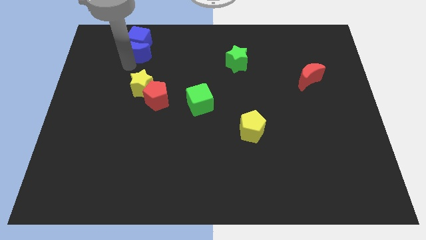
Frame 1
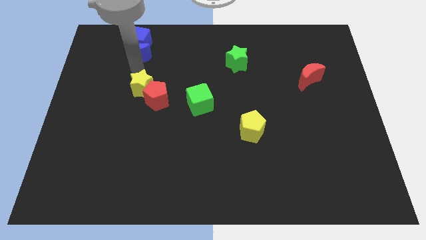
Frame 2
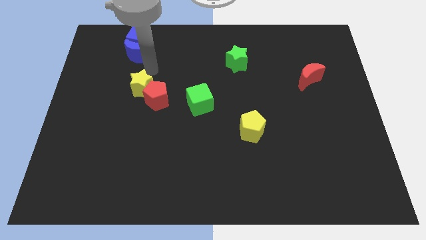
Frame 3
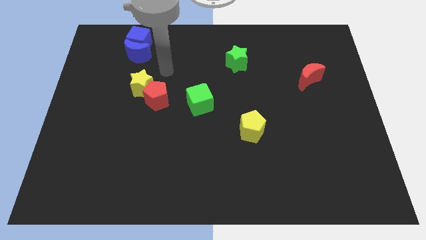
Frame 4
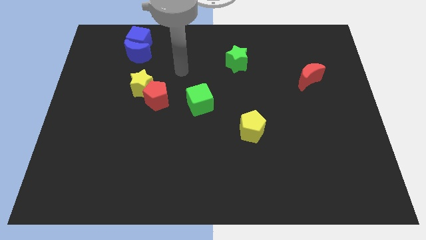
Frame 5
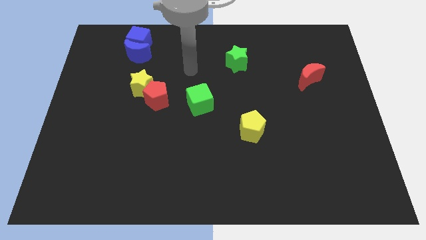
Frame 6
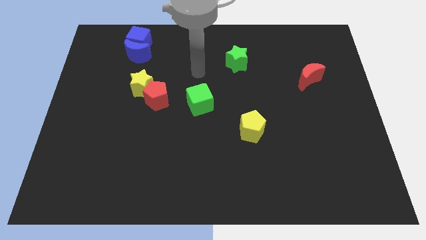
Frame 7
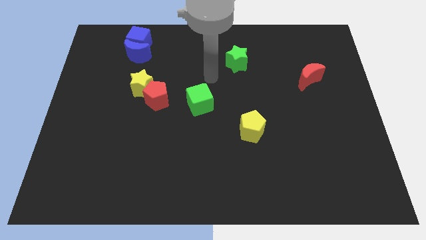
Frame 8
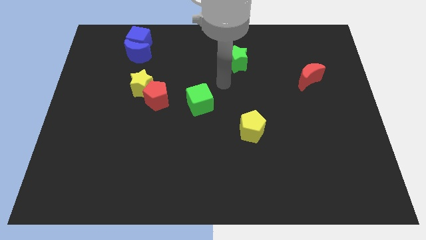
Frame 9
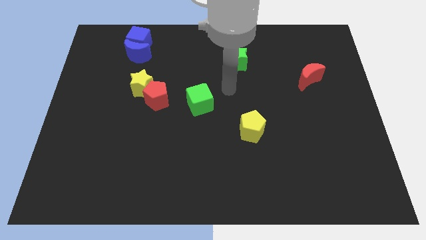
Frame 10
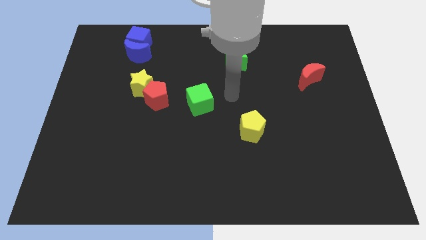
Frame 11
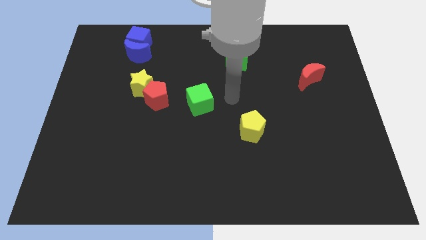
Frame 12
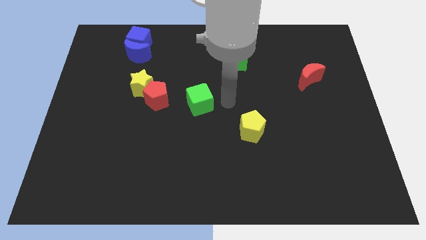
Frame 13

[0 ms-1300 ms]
place the arm to the right of the green cube

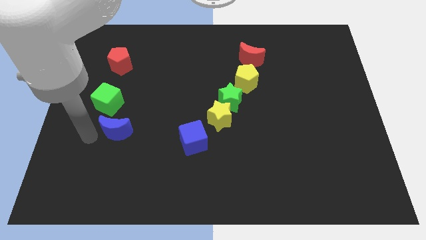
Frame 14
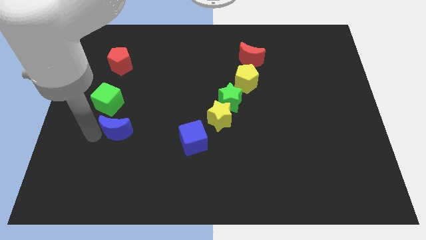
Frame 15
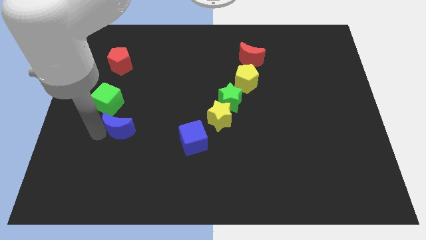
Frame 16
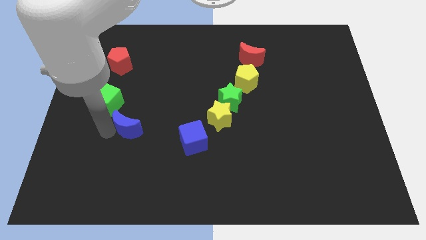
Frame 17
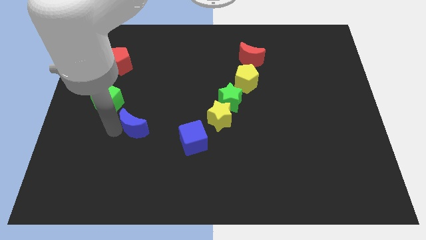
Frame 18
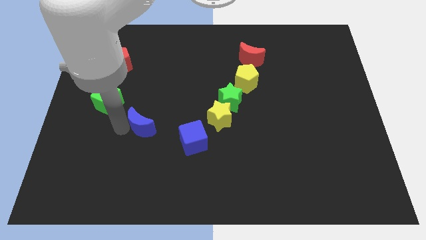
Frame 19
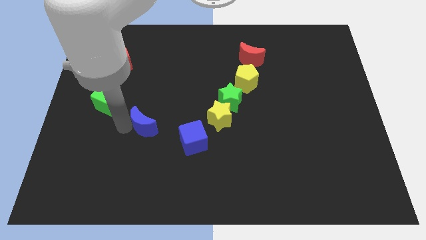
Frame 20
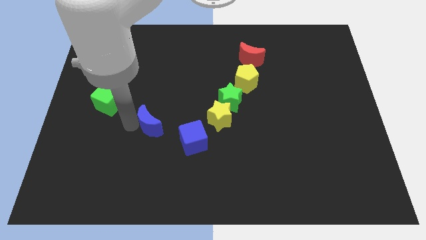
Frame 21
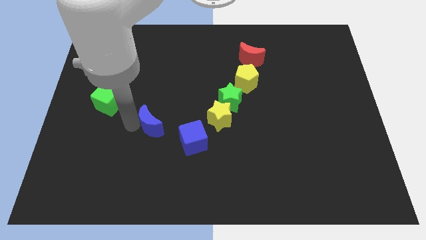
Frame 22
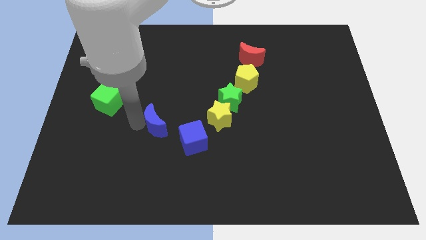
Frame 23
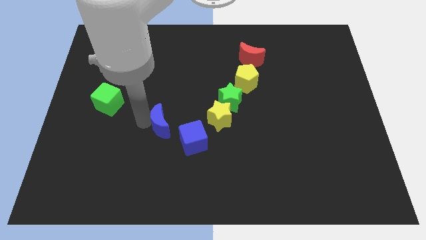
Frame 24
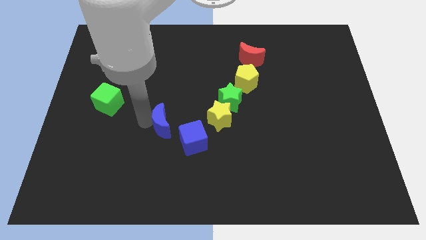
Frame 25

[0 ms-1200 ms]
put the blue moon to the top left of the blue cube

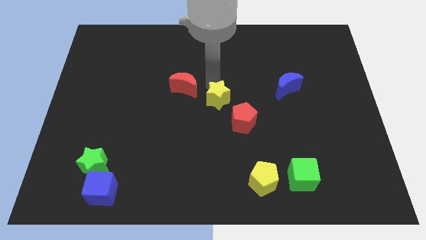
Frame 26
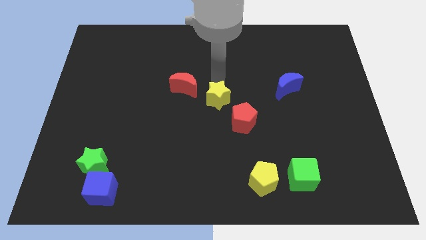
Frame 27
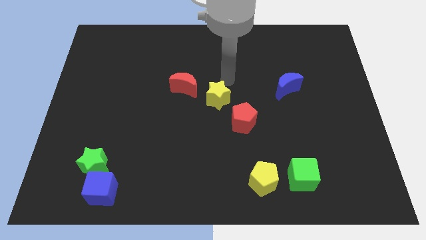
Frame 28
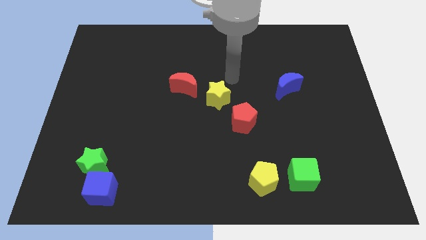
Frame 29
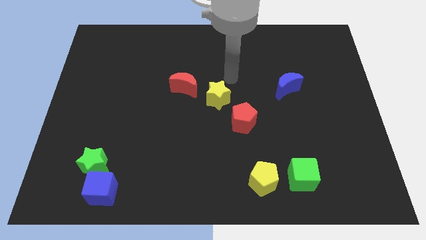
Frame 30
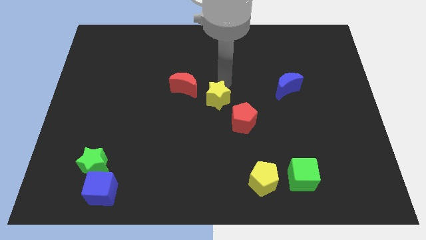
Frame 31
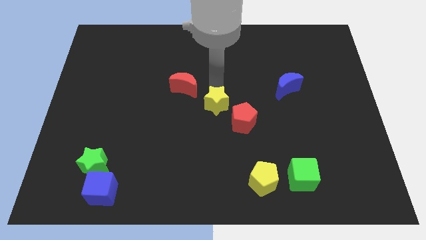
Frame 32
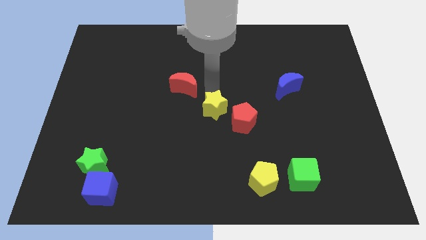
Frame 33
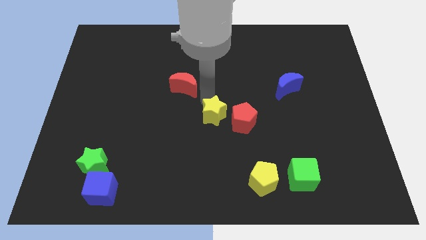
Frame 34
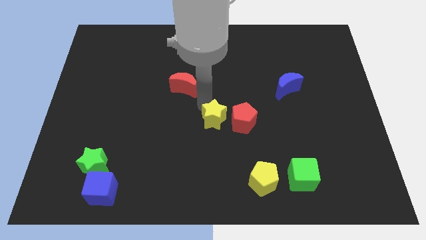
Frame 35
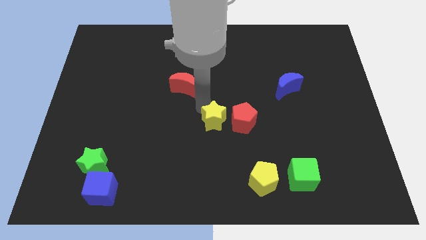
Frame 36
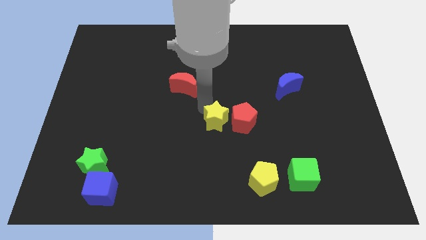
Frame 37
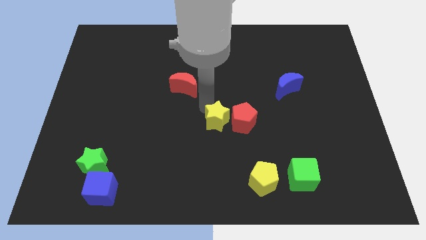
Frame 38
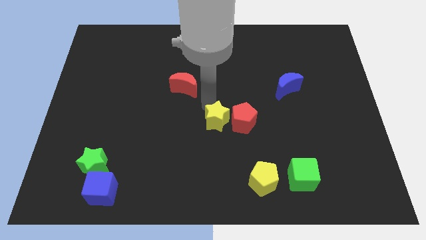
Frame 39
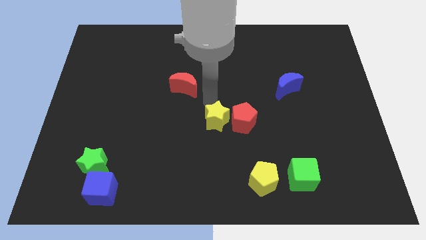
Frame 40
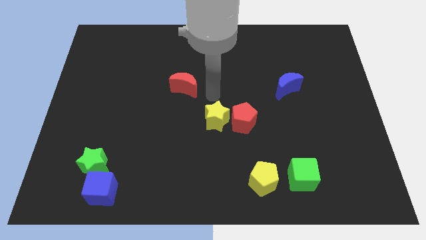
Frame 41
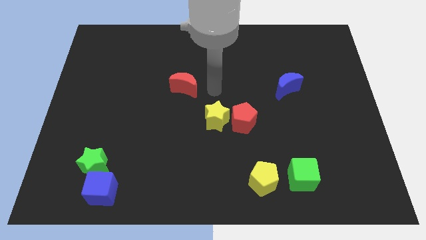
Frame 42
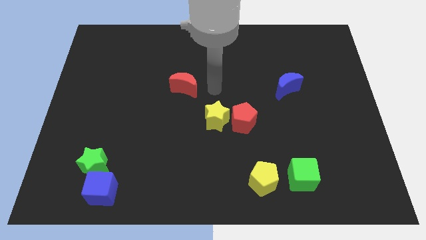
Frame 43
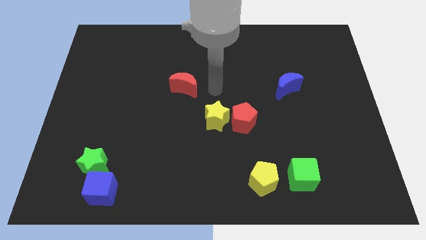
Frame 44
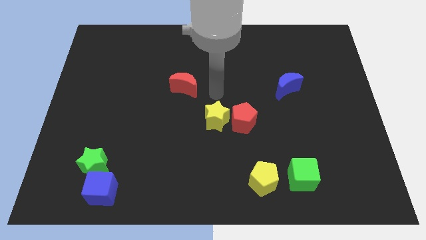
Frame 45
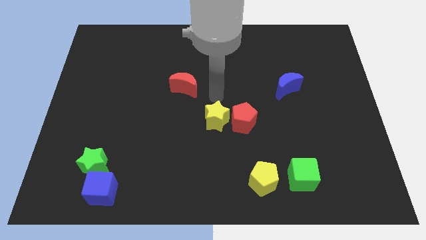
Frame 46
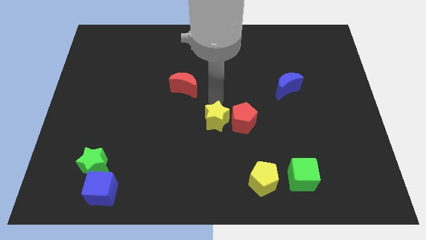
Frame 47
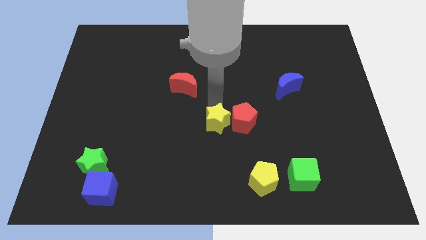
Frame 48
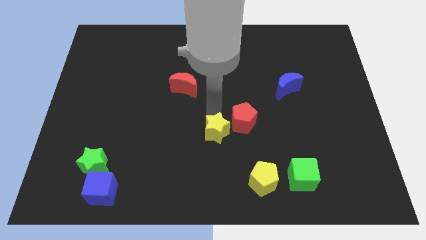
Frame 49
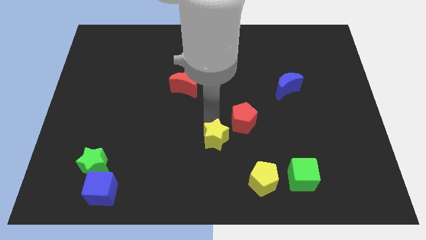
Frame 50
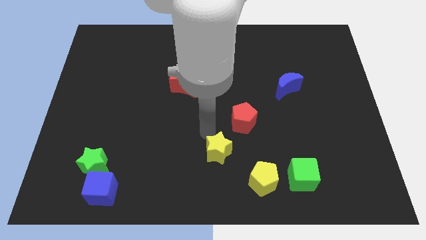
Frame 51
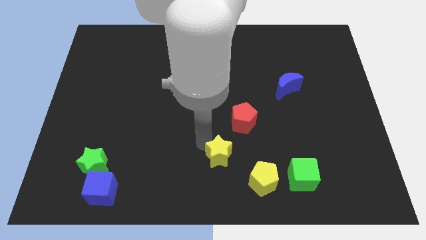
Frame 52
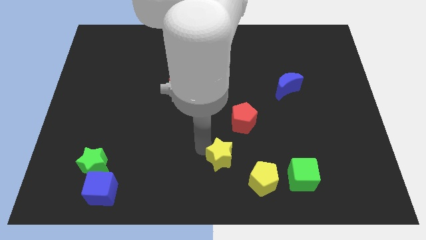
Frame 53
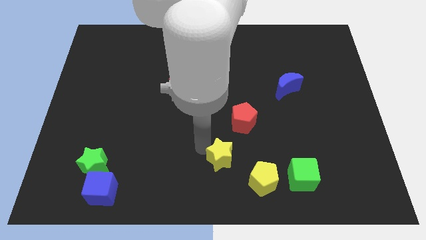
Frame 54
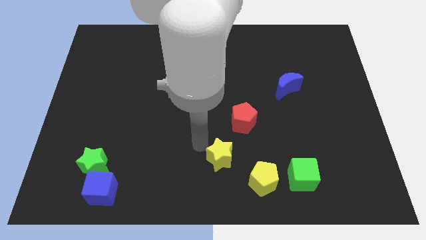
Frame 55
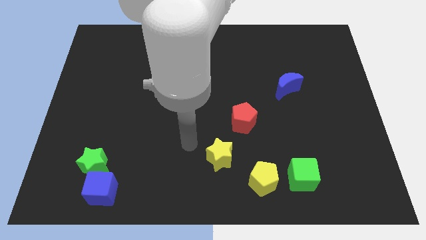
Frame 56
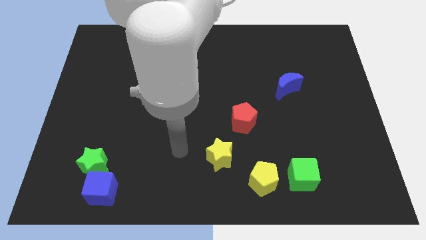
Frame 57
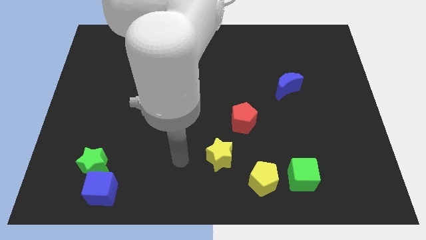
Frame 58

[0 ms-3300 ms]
move the yellow star diagonally left of the yellow pentagon

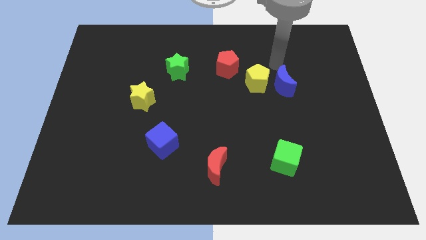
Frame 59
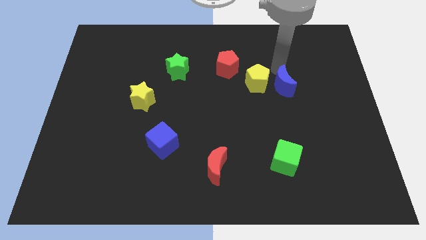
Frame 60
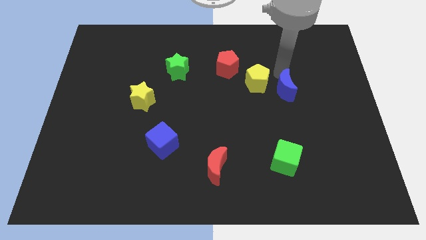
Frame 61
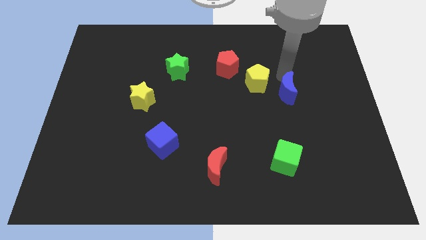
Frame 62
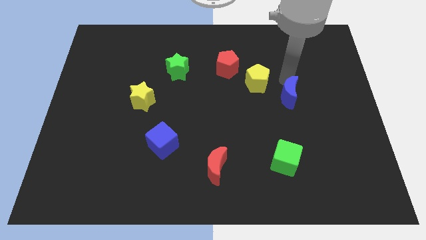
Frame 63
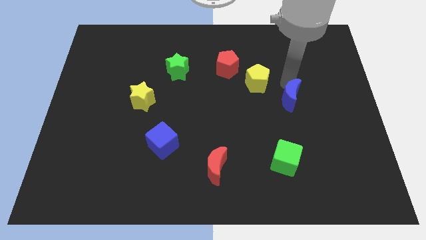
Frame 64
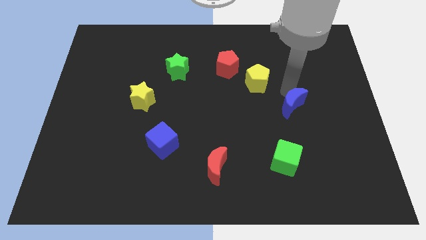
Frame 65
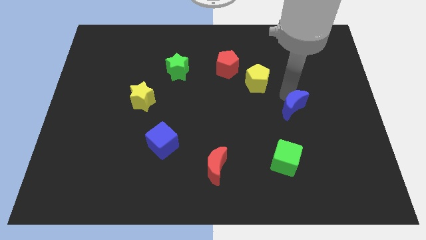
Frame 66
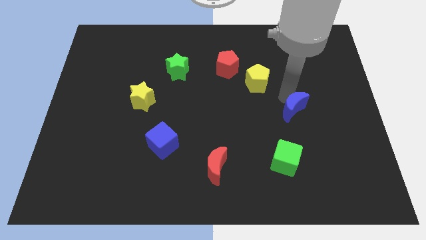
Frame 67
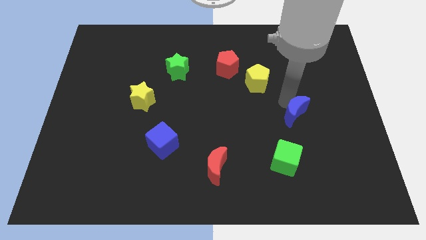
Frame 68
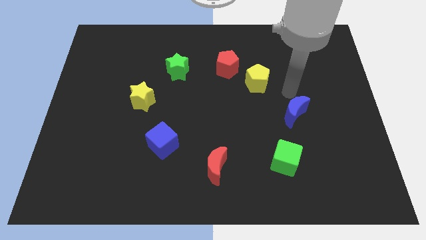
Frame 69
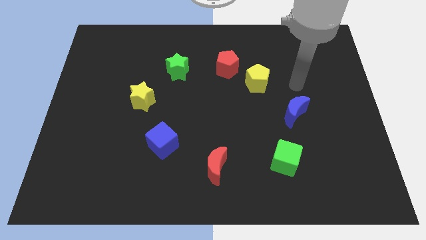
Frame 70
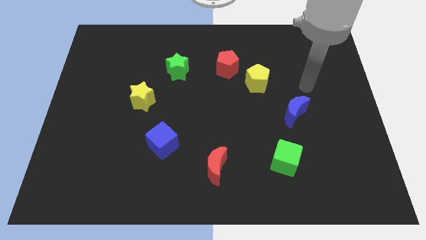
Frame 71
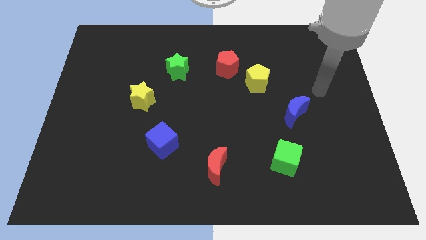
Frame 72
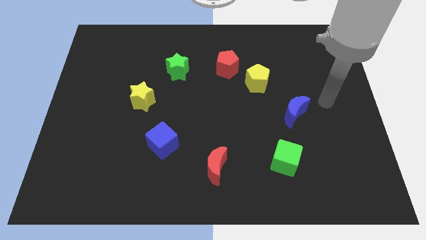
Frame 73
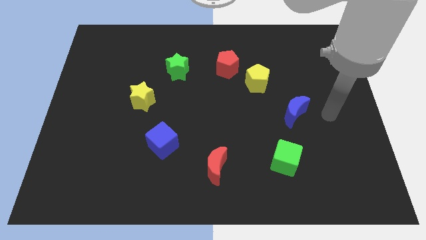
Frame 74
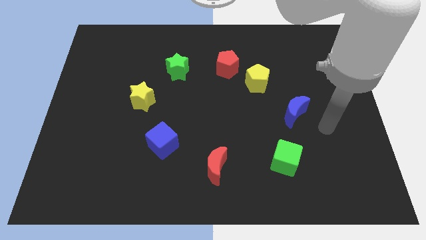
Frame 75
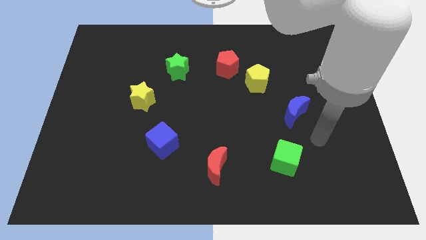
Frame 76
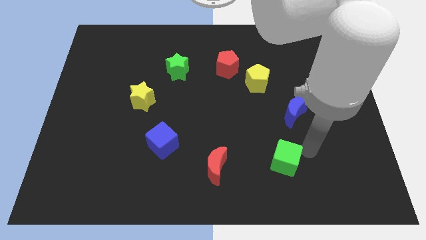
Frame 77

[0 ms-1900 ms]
move the blue crescent away from the yellow pentagon

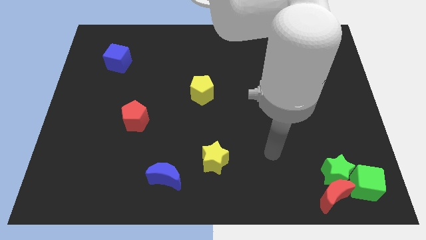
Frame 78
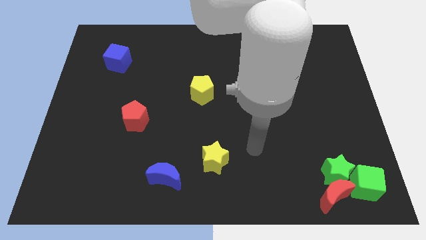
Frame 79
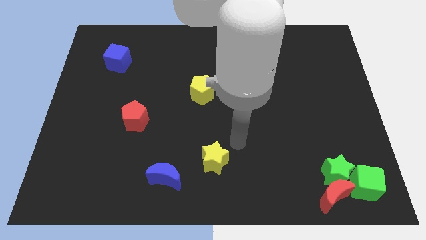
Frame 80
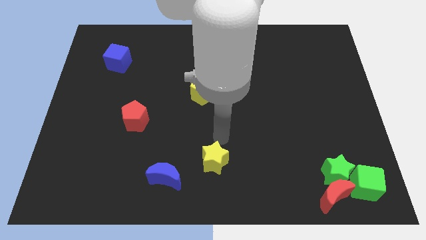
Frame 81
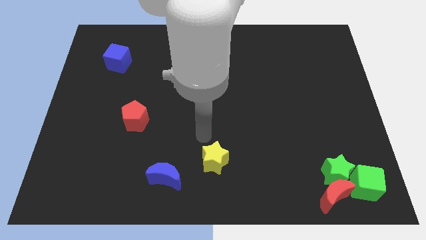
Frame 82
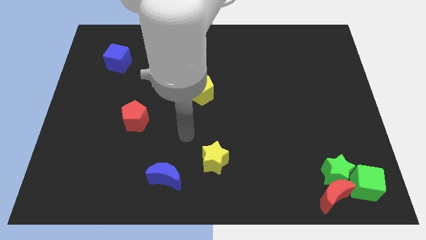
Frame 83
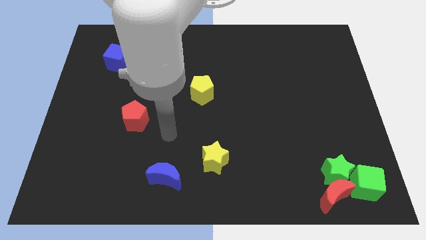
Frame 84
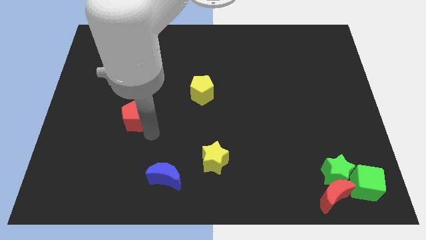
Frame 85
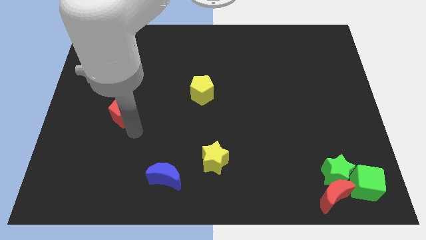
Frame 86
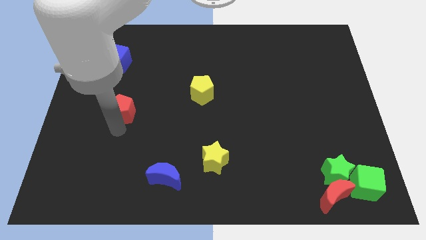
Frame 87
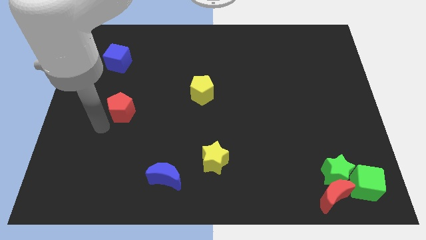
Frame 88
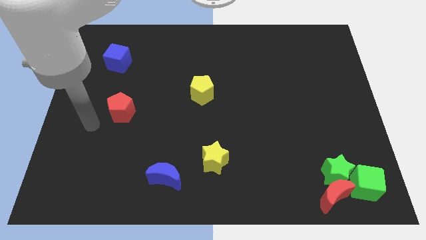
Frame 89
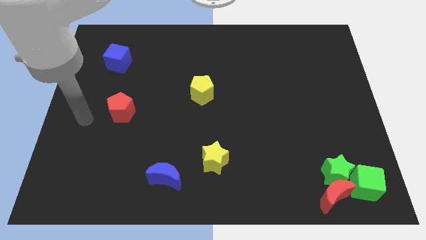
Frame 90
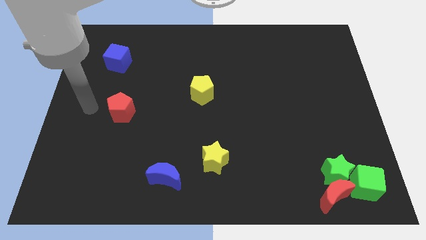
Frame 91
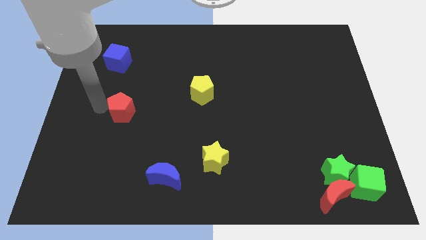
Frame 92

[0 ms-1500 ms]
move your arm towards the red pentagon
